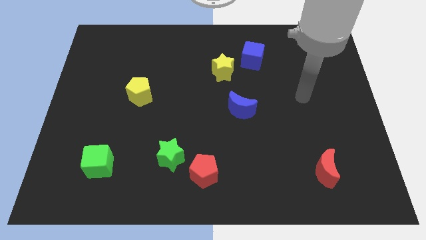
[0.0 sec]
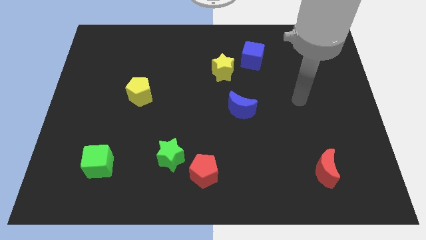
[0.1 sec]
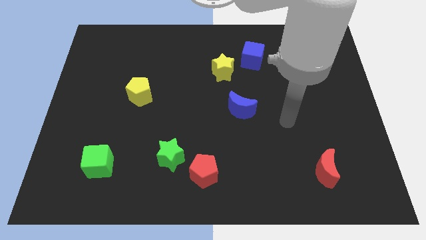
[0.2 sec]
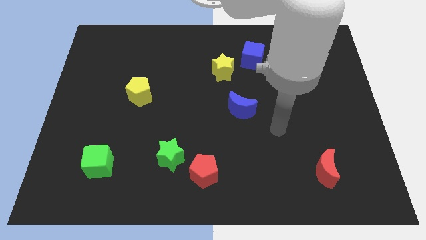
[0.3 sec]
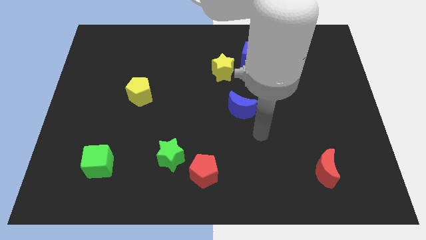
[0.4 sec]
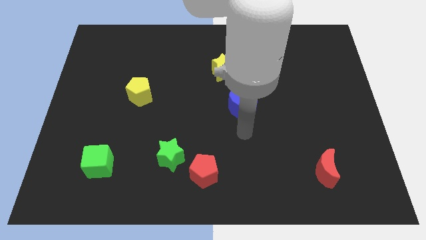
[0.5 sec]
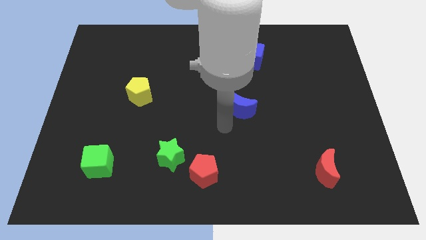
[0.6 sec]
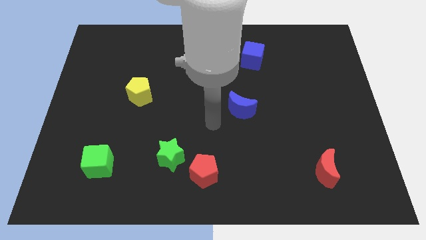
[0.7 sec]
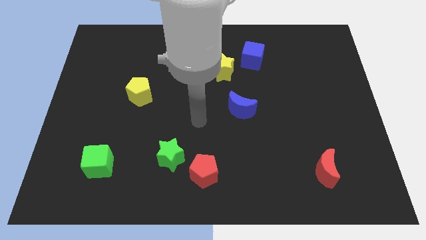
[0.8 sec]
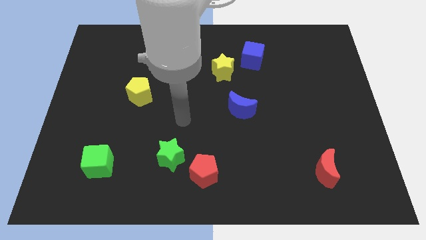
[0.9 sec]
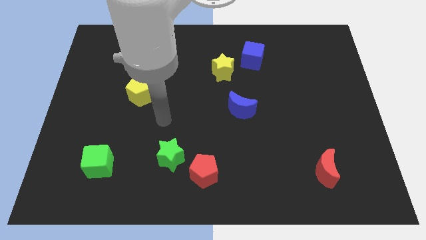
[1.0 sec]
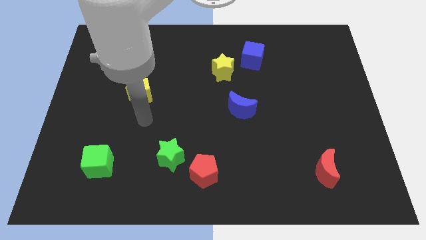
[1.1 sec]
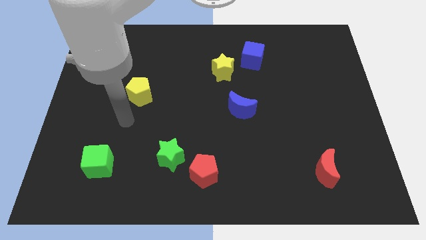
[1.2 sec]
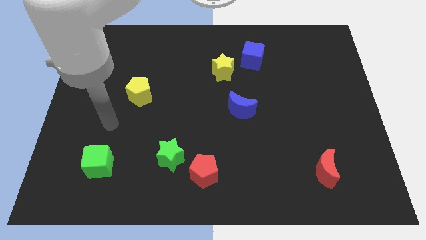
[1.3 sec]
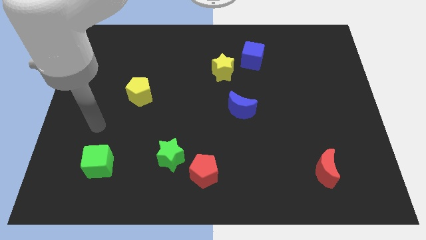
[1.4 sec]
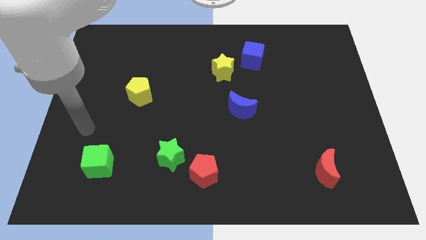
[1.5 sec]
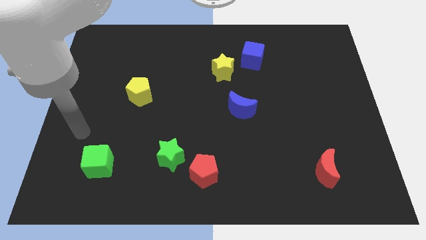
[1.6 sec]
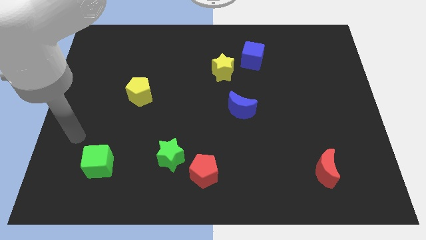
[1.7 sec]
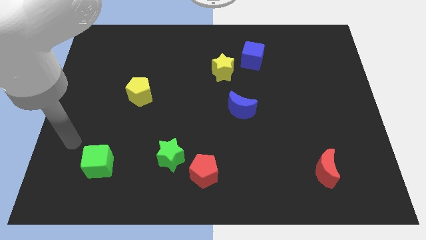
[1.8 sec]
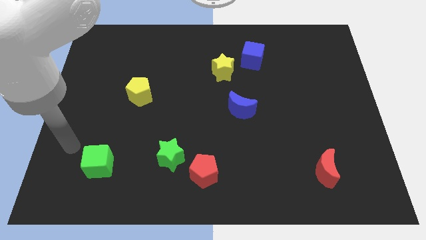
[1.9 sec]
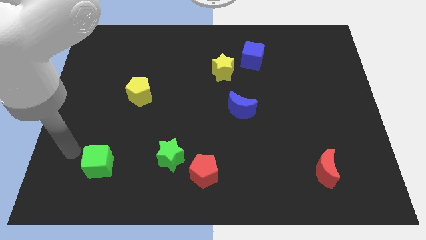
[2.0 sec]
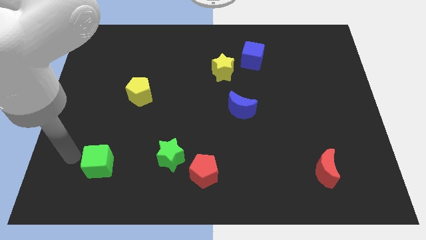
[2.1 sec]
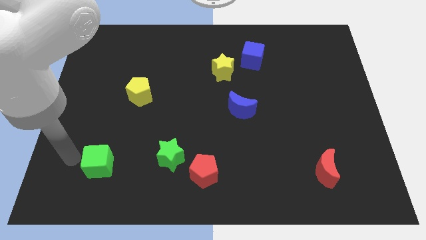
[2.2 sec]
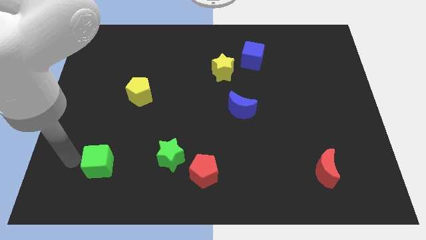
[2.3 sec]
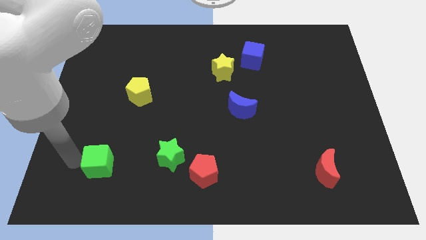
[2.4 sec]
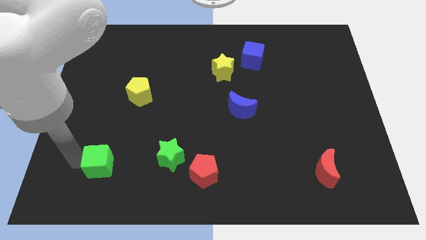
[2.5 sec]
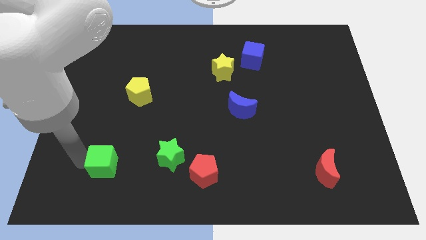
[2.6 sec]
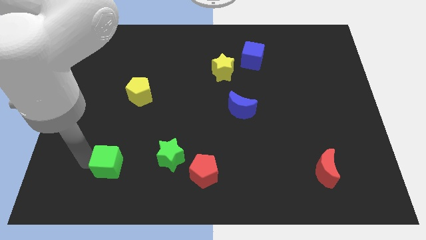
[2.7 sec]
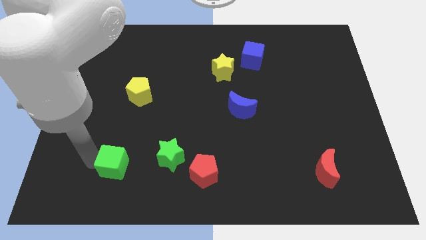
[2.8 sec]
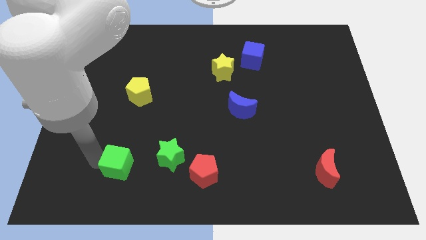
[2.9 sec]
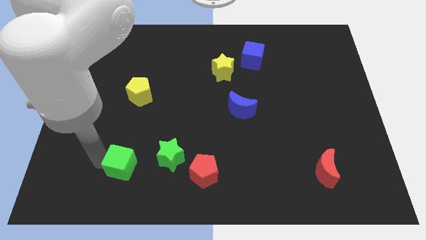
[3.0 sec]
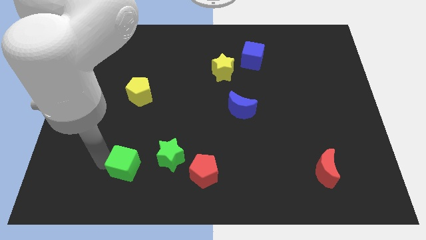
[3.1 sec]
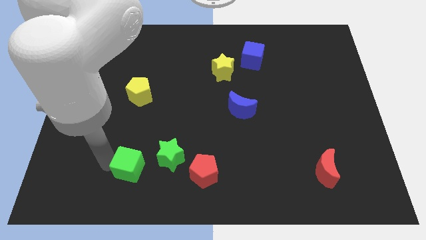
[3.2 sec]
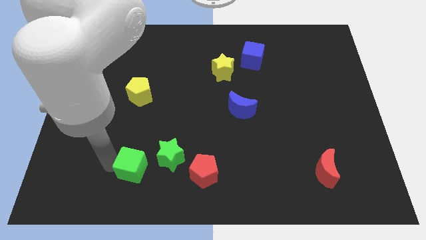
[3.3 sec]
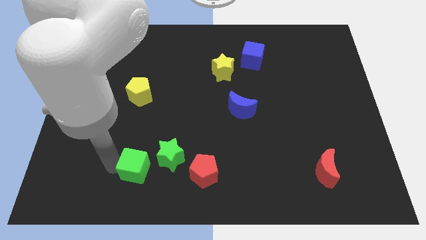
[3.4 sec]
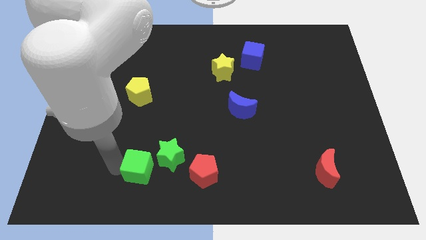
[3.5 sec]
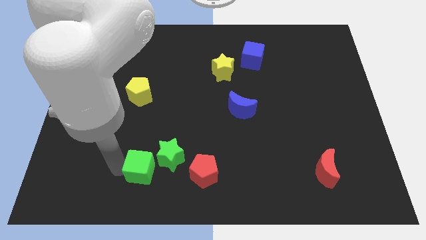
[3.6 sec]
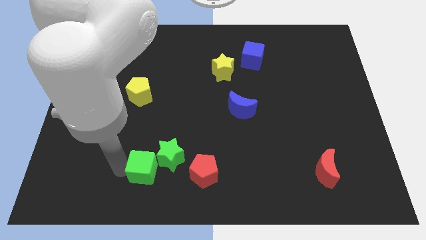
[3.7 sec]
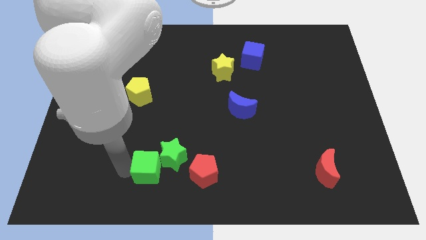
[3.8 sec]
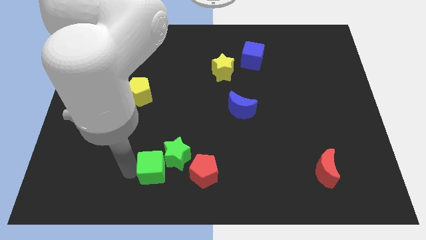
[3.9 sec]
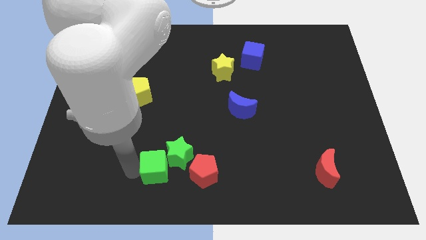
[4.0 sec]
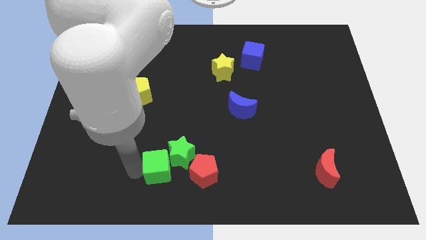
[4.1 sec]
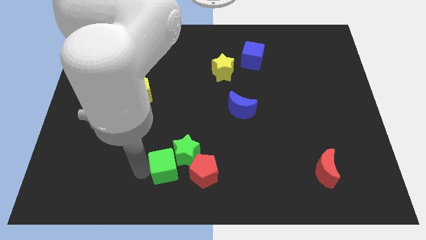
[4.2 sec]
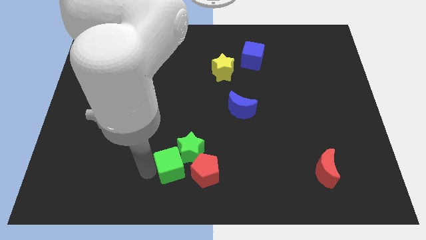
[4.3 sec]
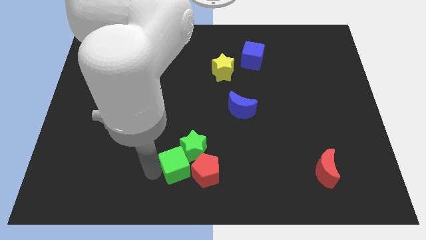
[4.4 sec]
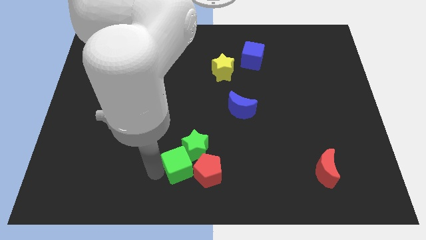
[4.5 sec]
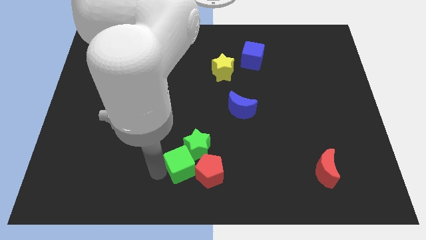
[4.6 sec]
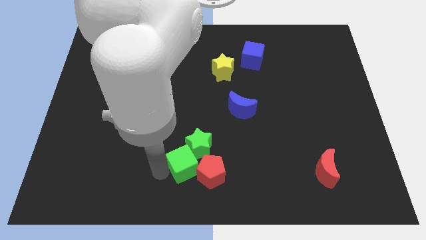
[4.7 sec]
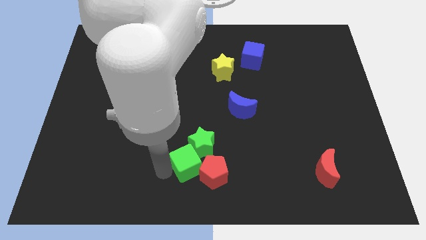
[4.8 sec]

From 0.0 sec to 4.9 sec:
move the green cube towards the red pentagon
